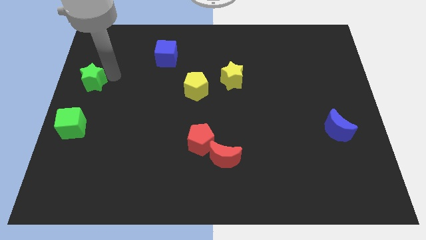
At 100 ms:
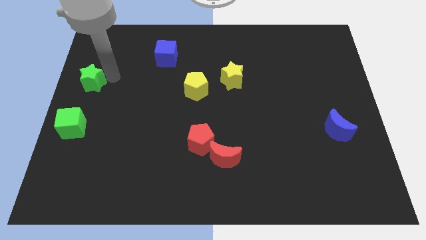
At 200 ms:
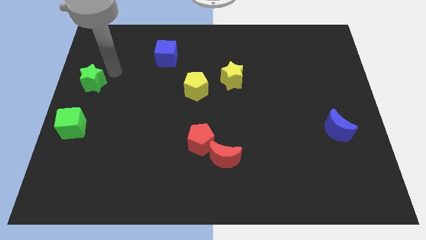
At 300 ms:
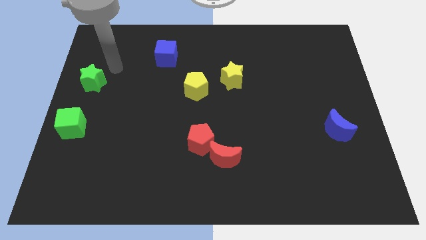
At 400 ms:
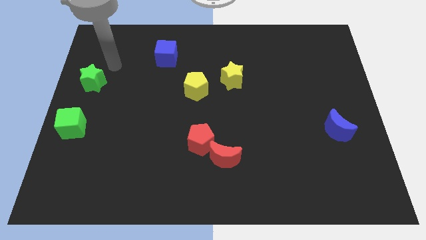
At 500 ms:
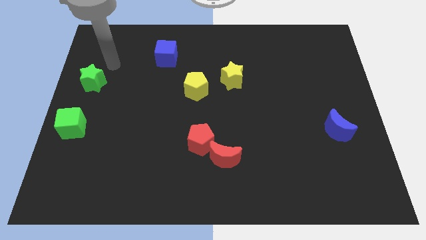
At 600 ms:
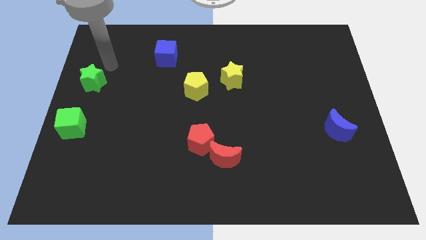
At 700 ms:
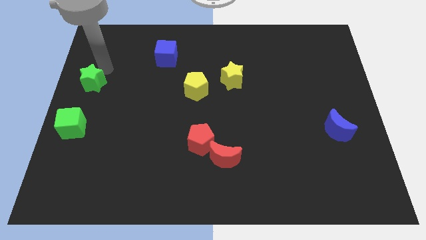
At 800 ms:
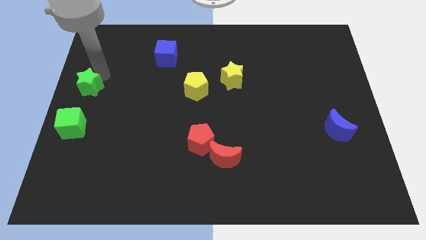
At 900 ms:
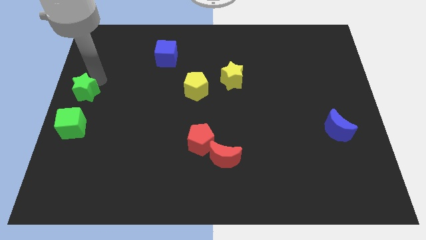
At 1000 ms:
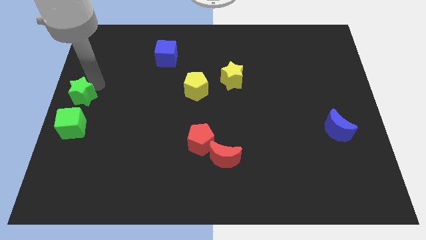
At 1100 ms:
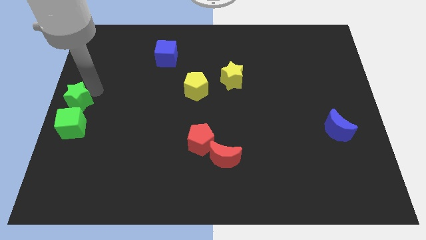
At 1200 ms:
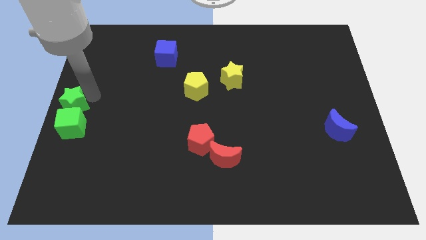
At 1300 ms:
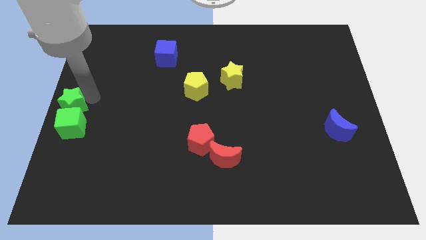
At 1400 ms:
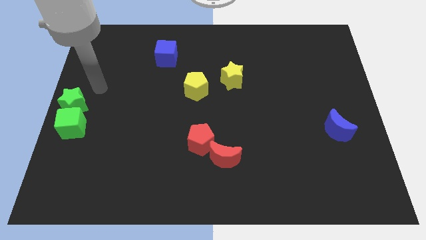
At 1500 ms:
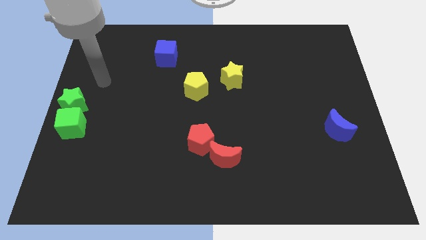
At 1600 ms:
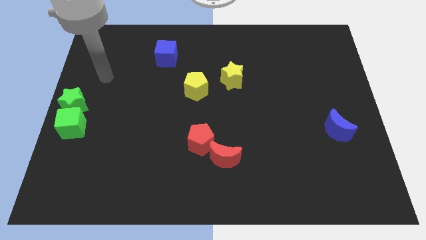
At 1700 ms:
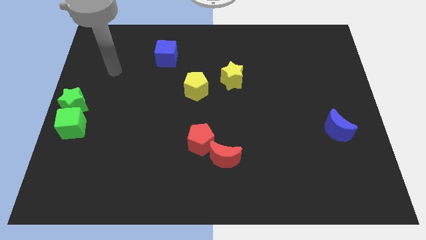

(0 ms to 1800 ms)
move green star above the green cube

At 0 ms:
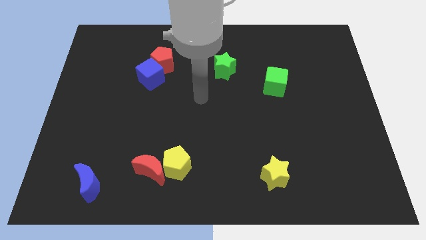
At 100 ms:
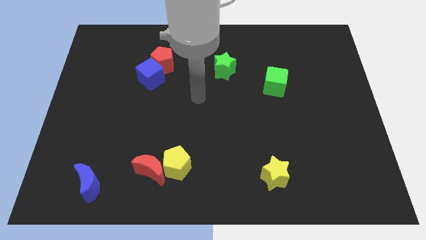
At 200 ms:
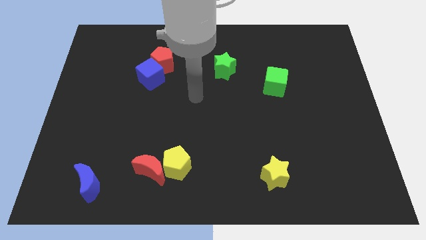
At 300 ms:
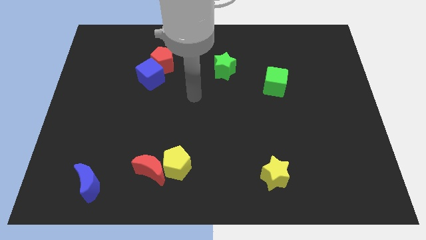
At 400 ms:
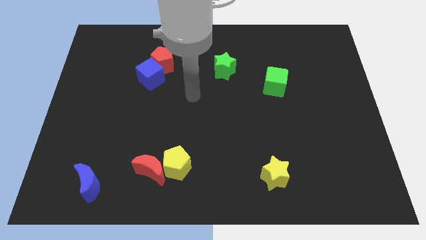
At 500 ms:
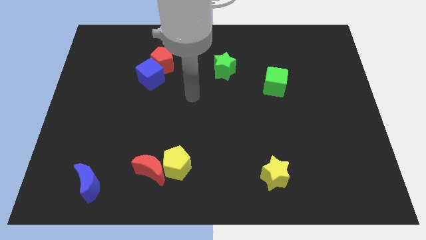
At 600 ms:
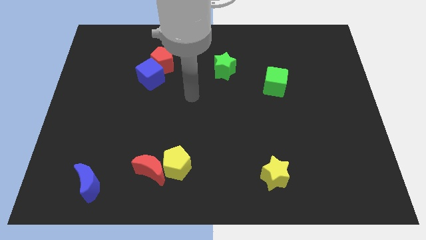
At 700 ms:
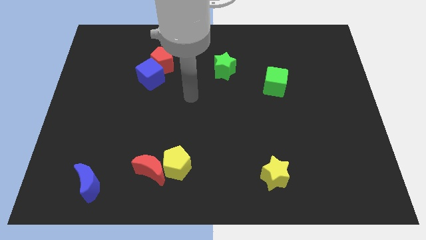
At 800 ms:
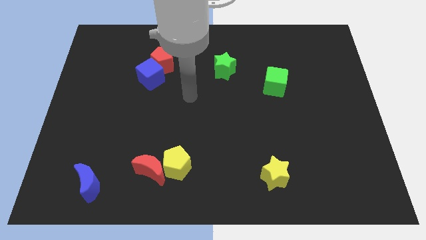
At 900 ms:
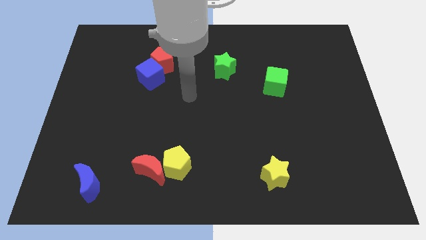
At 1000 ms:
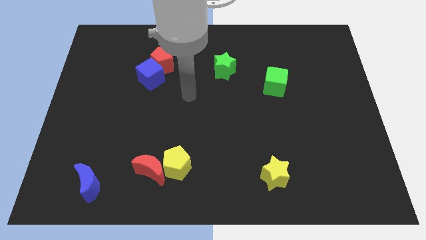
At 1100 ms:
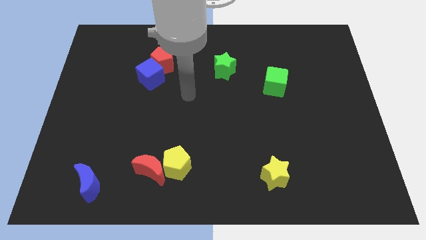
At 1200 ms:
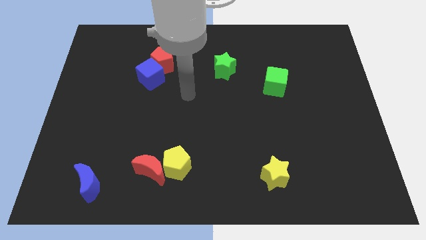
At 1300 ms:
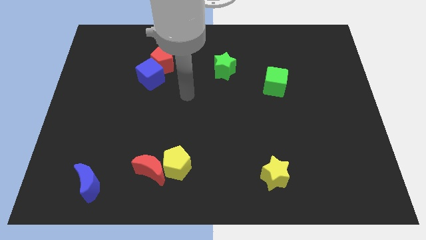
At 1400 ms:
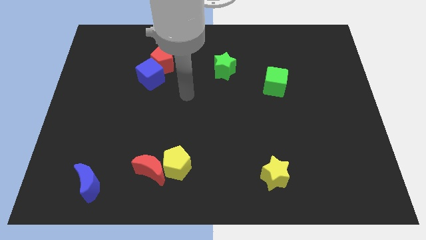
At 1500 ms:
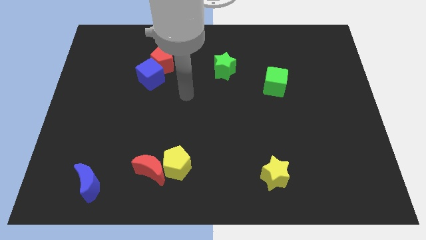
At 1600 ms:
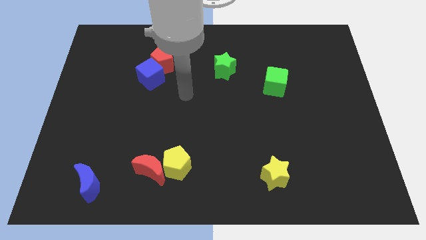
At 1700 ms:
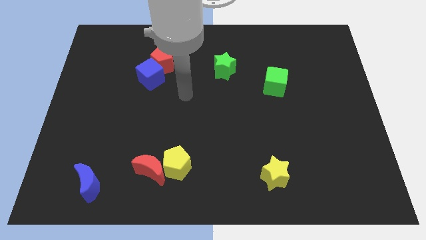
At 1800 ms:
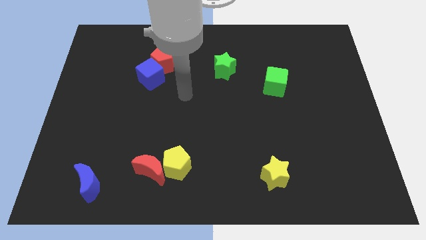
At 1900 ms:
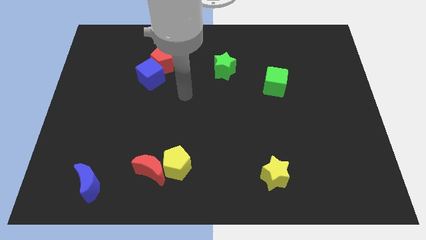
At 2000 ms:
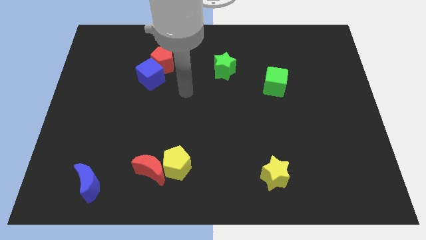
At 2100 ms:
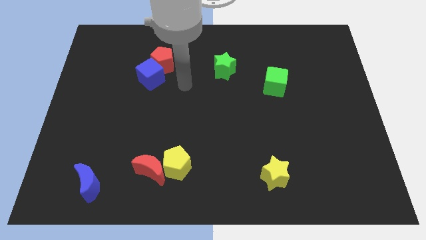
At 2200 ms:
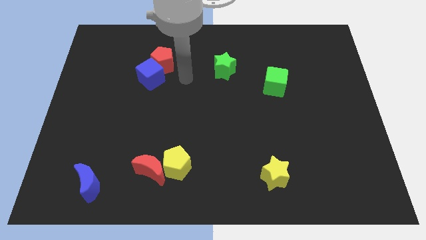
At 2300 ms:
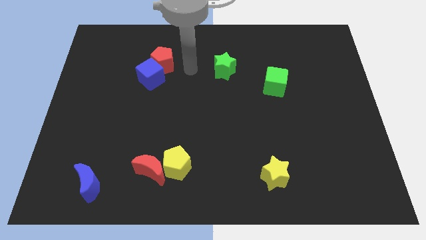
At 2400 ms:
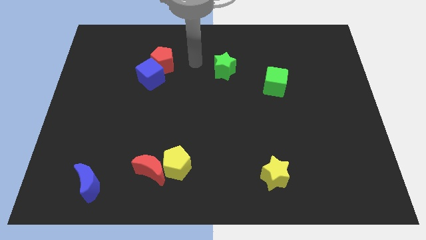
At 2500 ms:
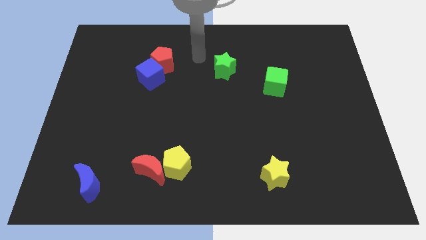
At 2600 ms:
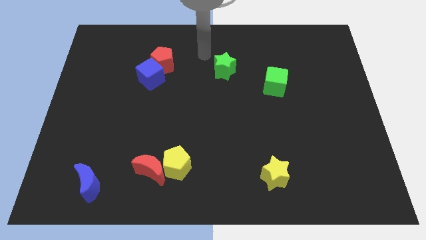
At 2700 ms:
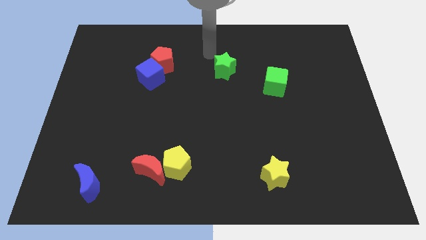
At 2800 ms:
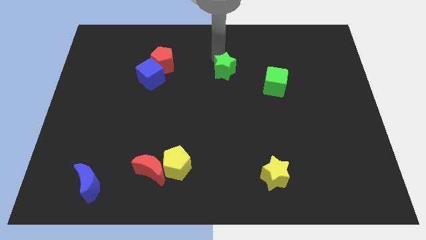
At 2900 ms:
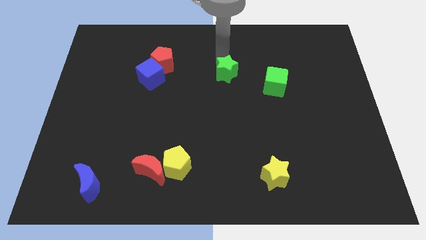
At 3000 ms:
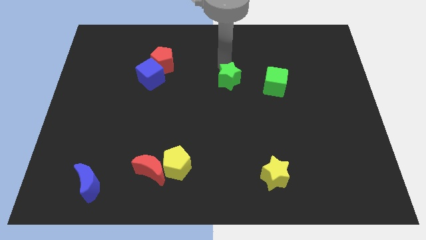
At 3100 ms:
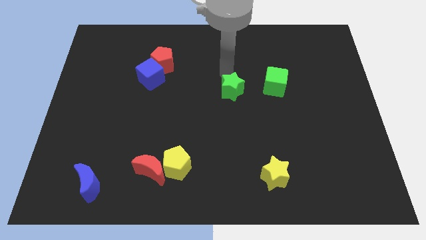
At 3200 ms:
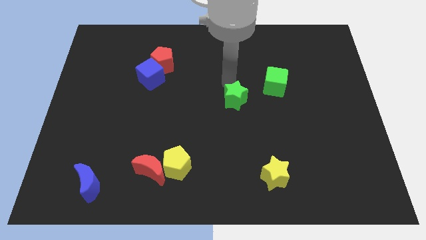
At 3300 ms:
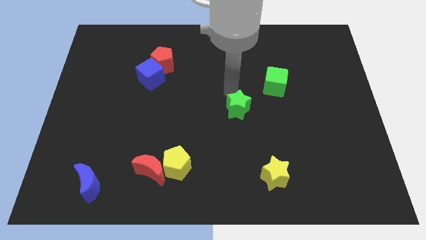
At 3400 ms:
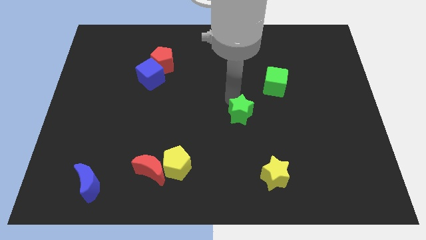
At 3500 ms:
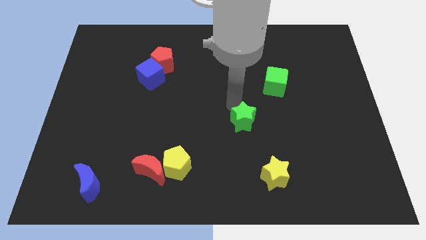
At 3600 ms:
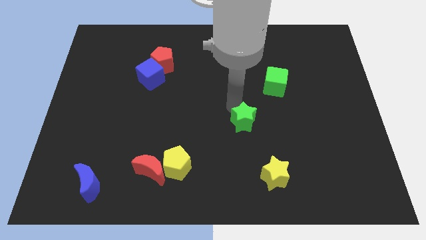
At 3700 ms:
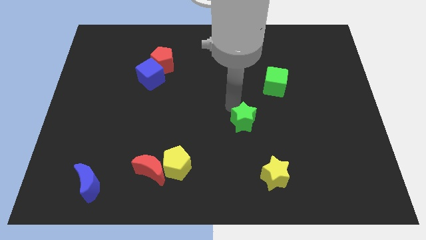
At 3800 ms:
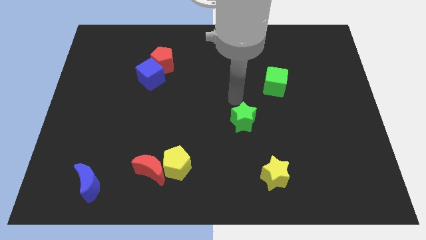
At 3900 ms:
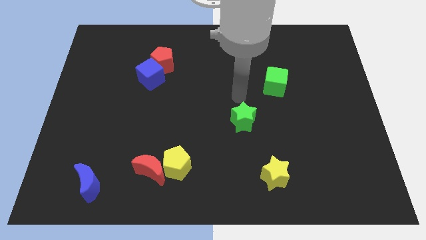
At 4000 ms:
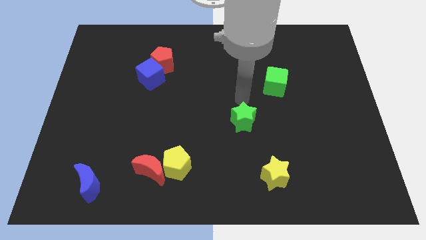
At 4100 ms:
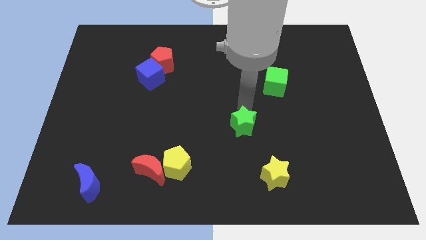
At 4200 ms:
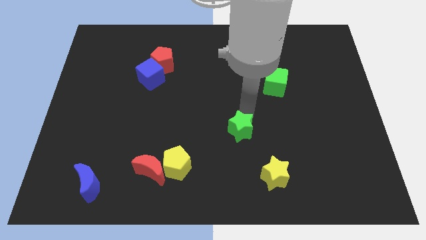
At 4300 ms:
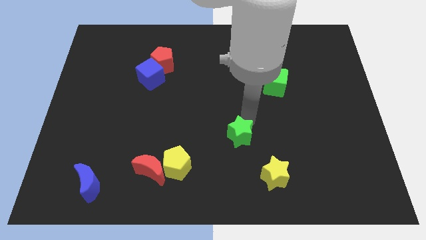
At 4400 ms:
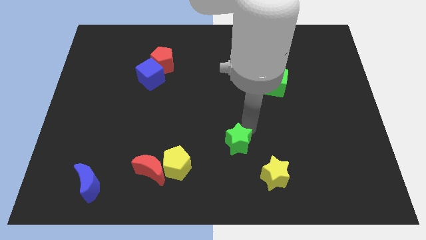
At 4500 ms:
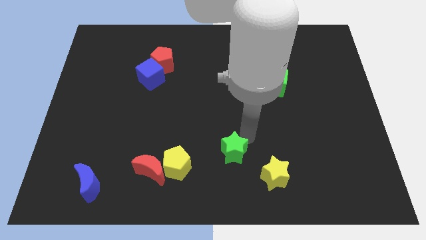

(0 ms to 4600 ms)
place the green star diagonally below the red pentagon

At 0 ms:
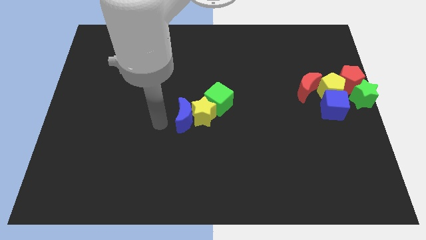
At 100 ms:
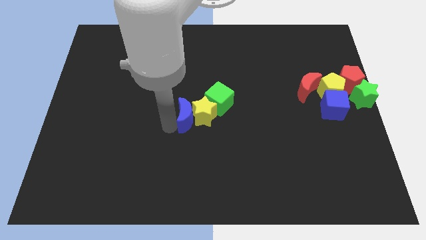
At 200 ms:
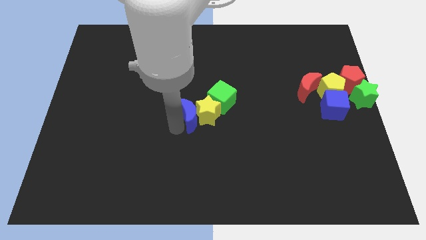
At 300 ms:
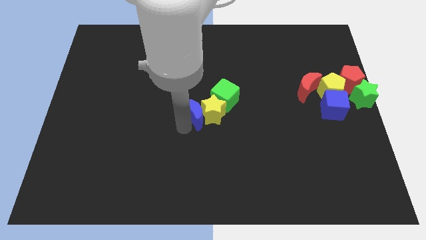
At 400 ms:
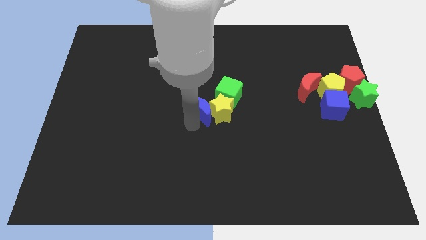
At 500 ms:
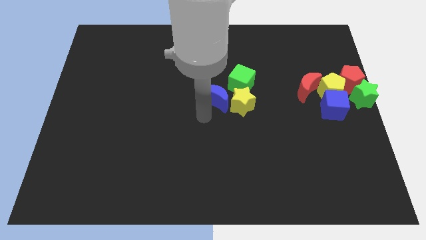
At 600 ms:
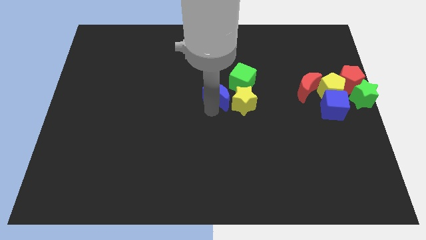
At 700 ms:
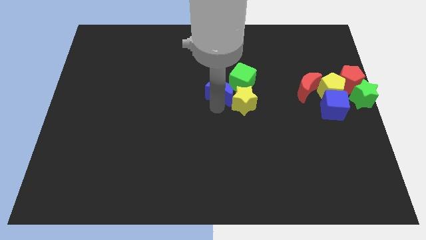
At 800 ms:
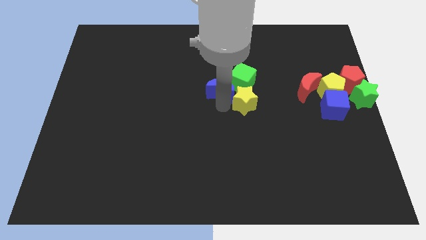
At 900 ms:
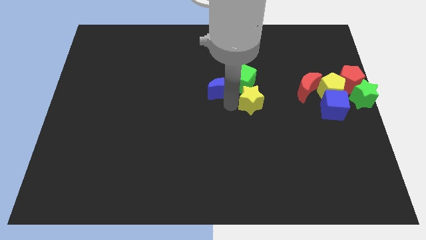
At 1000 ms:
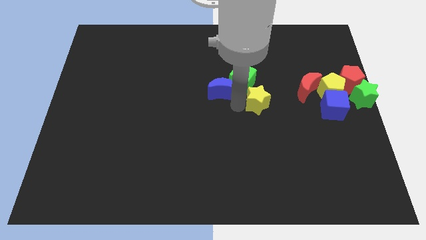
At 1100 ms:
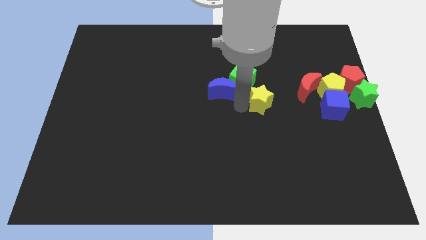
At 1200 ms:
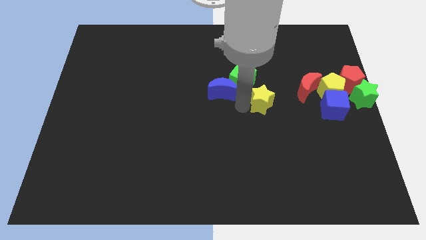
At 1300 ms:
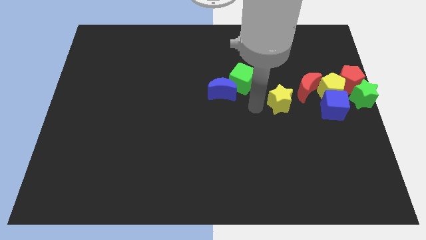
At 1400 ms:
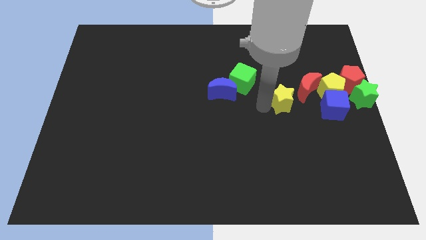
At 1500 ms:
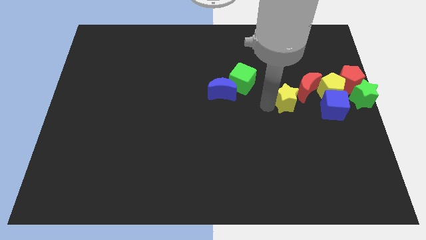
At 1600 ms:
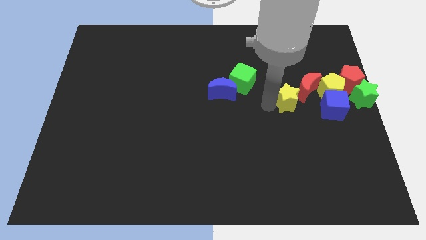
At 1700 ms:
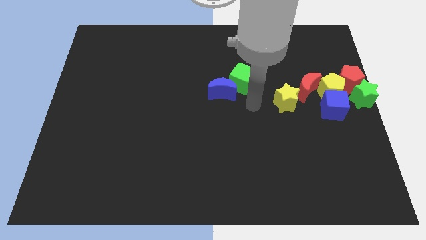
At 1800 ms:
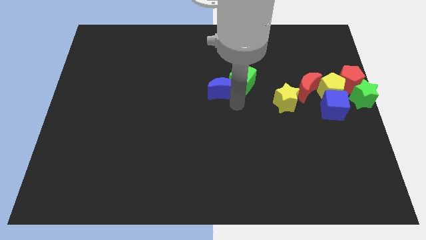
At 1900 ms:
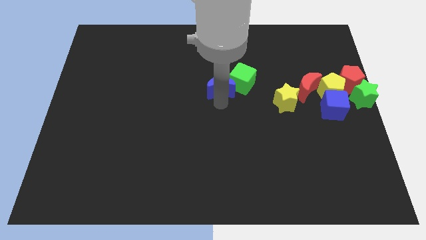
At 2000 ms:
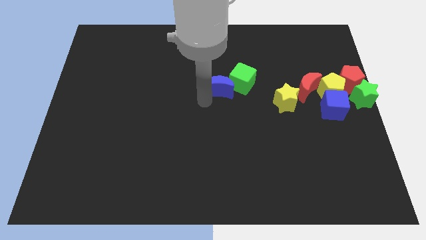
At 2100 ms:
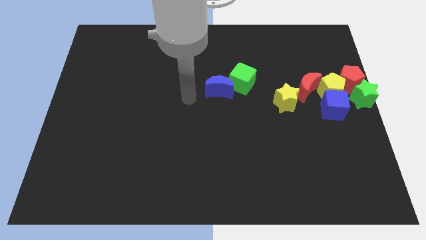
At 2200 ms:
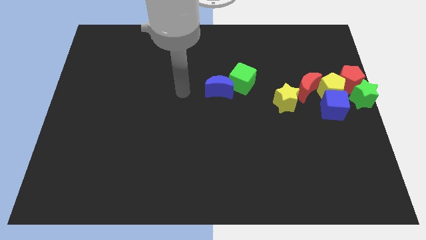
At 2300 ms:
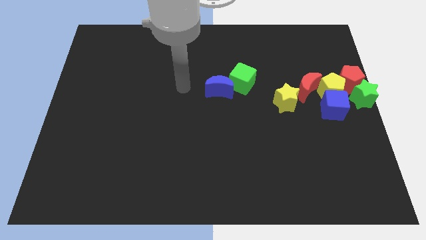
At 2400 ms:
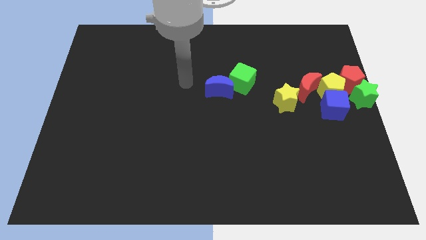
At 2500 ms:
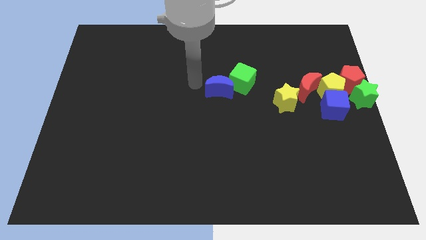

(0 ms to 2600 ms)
push the yellow star to the left side of the red moon

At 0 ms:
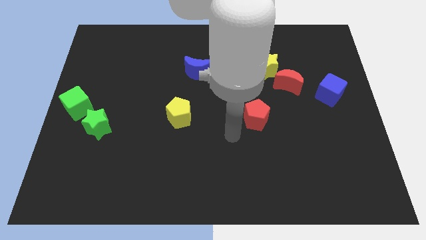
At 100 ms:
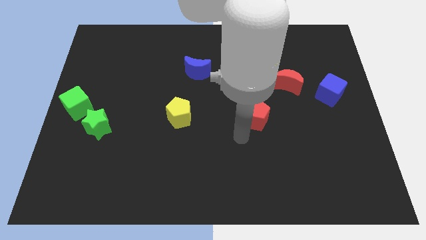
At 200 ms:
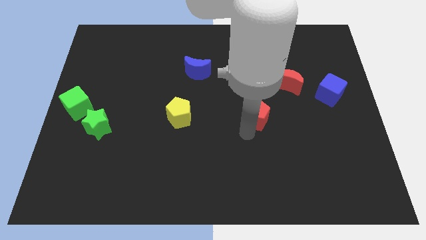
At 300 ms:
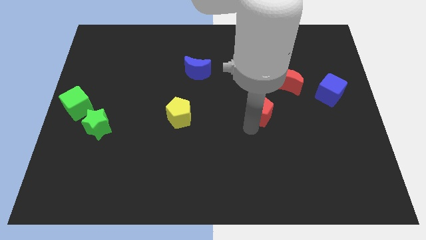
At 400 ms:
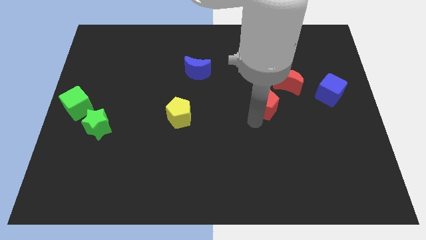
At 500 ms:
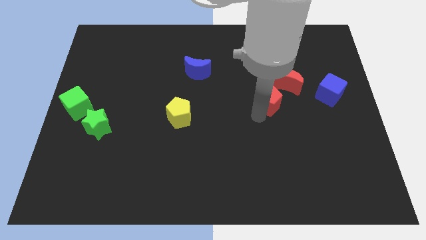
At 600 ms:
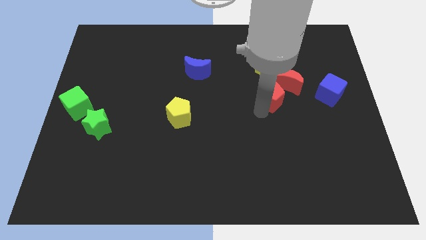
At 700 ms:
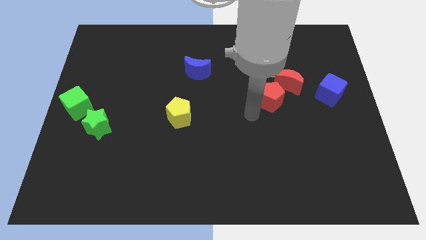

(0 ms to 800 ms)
move the red pentagon diagonal to the red moon
